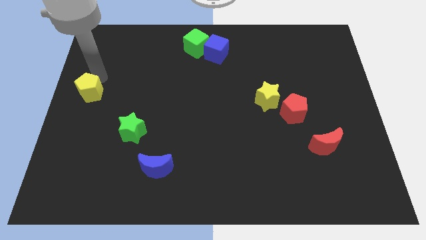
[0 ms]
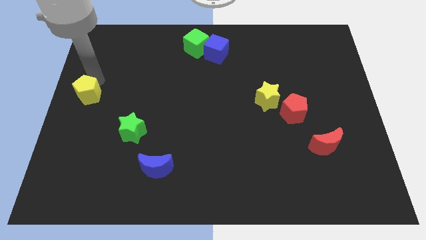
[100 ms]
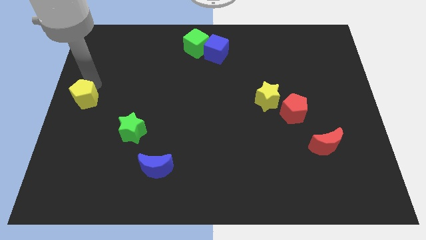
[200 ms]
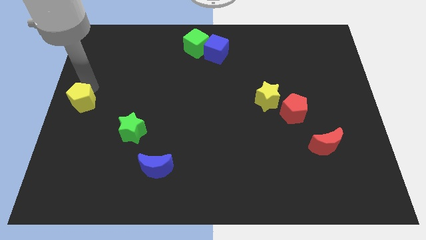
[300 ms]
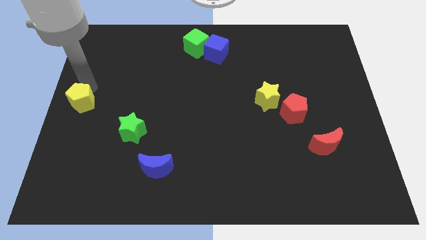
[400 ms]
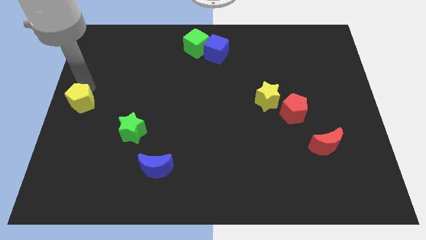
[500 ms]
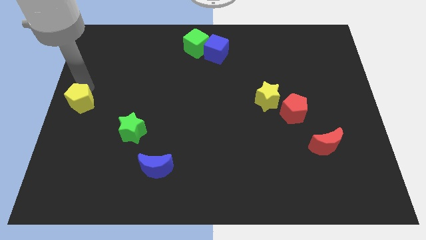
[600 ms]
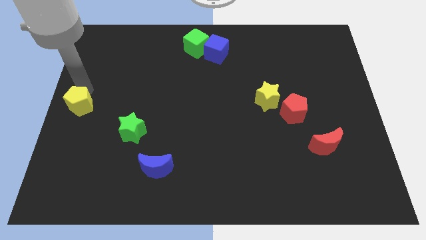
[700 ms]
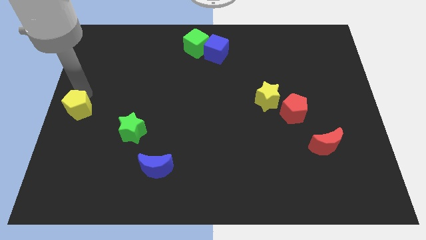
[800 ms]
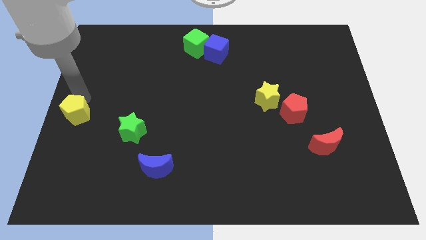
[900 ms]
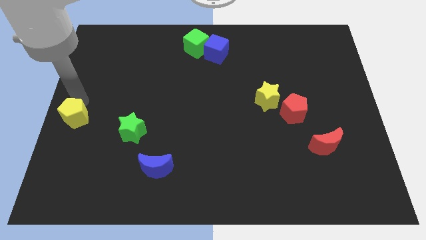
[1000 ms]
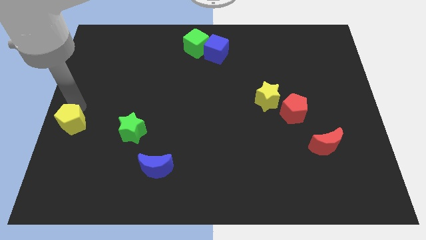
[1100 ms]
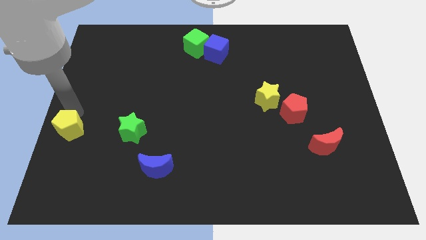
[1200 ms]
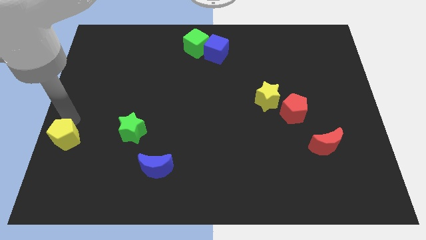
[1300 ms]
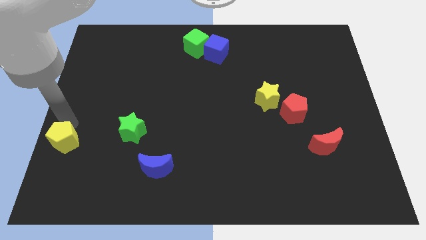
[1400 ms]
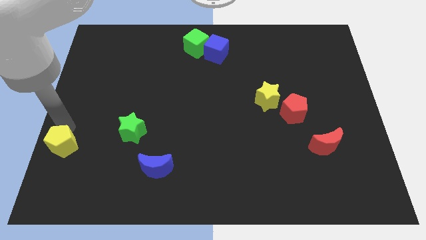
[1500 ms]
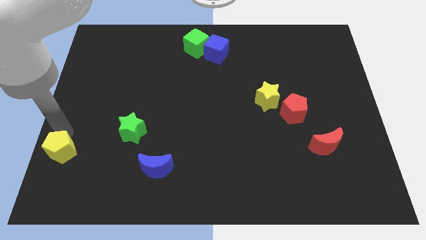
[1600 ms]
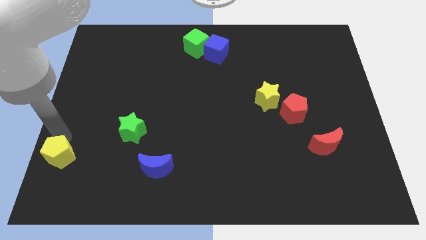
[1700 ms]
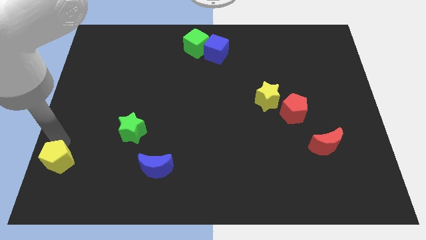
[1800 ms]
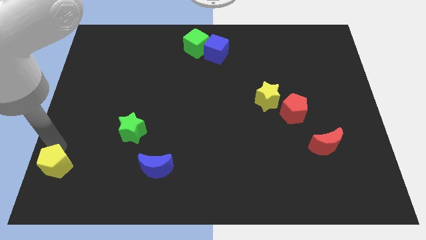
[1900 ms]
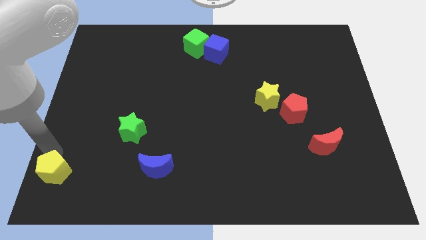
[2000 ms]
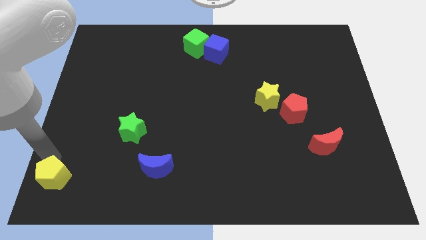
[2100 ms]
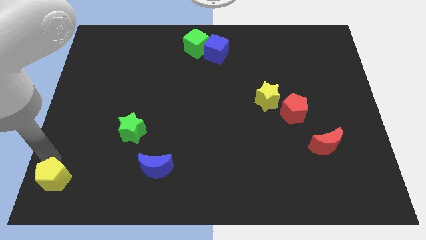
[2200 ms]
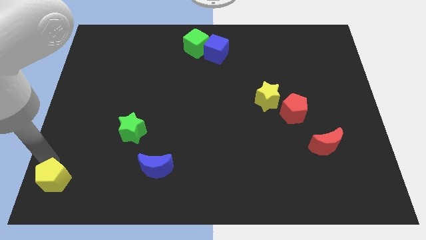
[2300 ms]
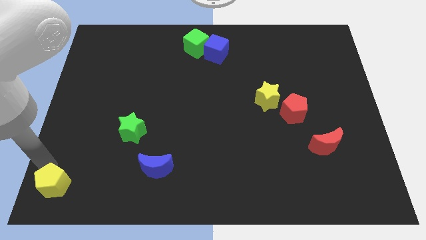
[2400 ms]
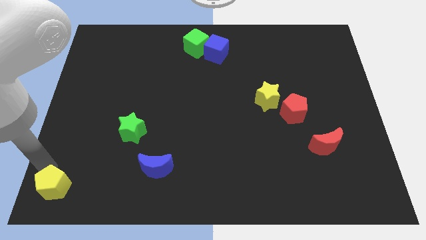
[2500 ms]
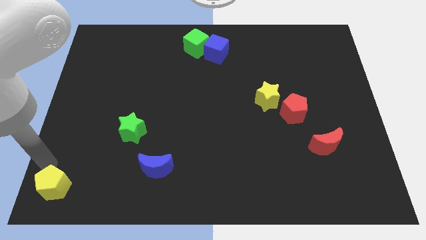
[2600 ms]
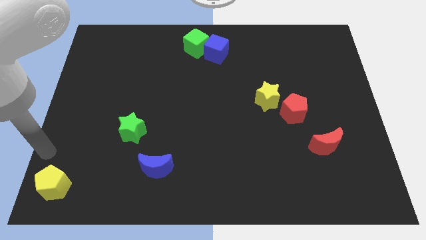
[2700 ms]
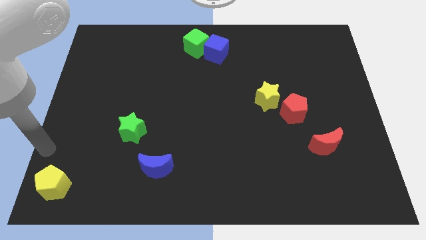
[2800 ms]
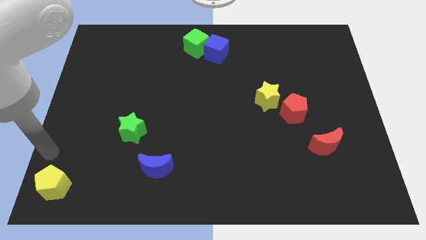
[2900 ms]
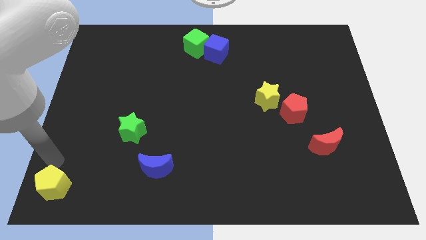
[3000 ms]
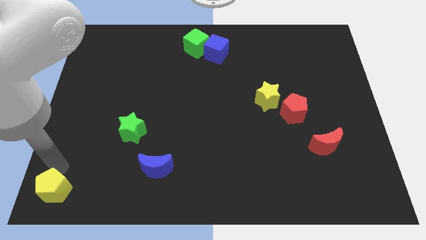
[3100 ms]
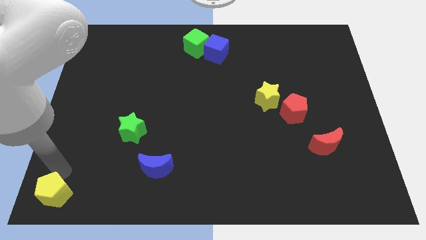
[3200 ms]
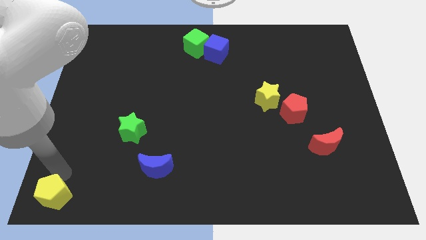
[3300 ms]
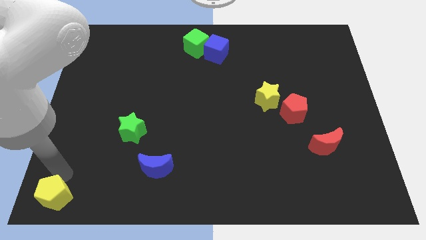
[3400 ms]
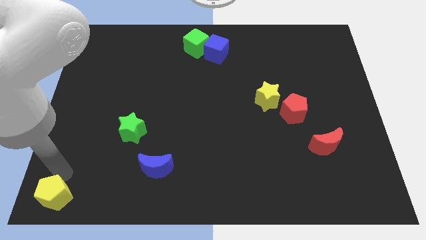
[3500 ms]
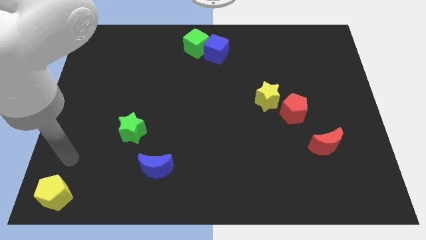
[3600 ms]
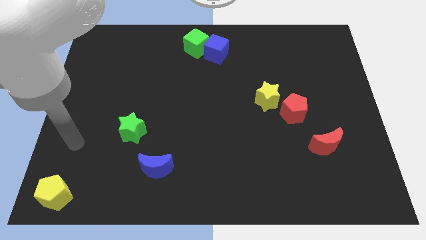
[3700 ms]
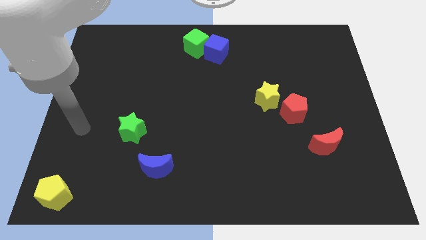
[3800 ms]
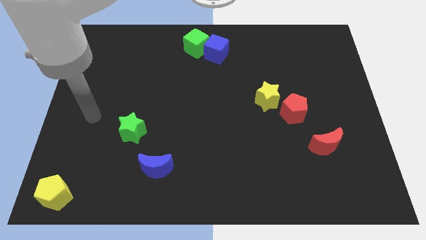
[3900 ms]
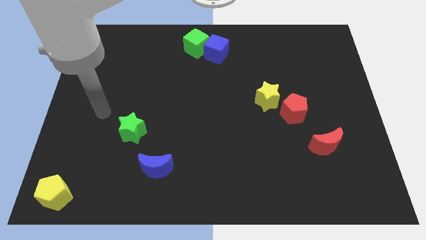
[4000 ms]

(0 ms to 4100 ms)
push the yellow pentagon to the bottom left corner of the board

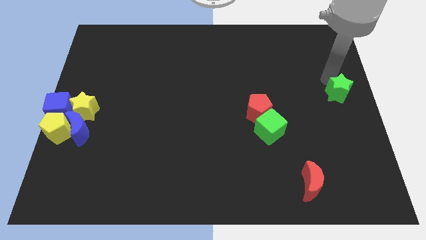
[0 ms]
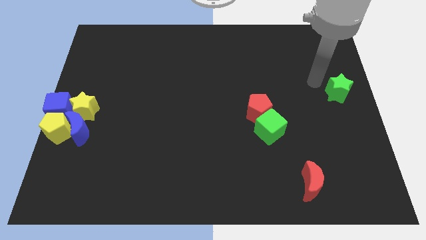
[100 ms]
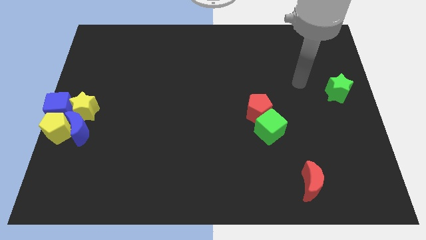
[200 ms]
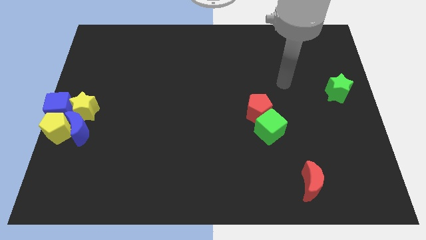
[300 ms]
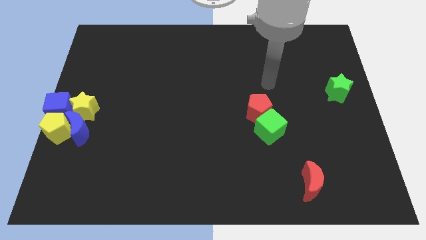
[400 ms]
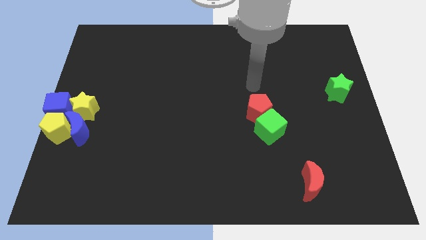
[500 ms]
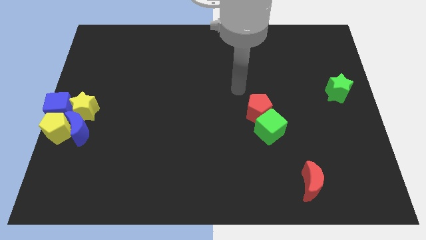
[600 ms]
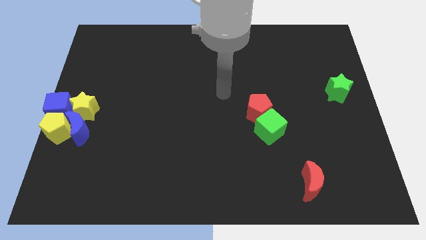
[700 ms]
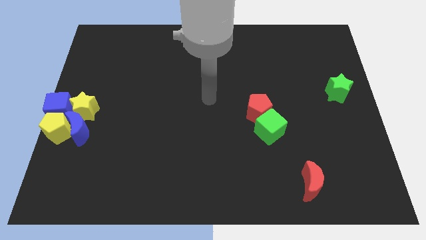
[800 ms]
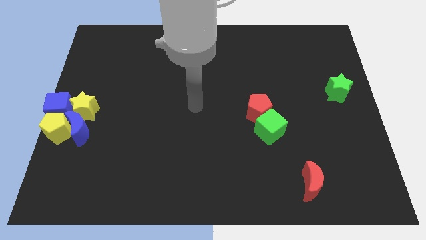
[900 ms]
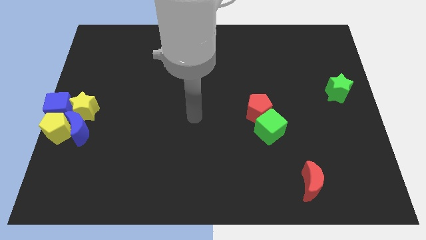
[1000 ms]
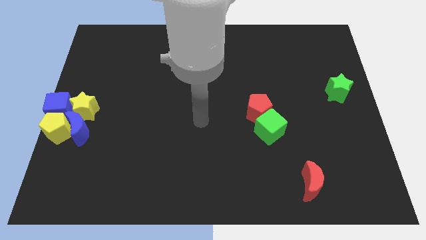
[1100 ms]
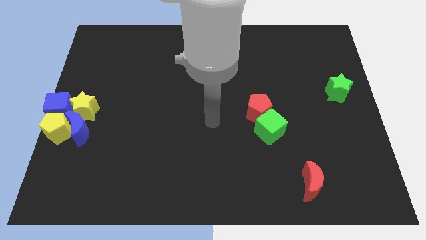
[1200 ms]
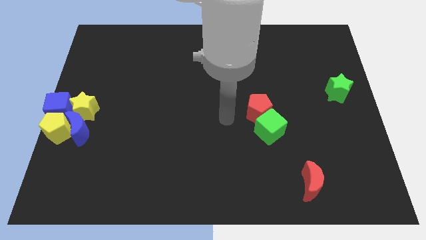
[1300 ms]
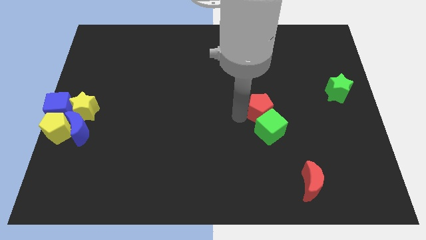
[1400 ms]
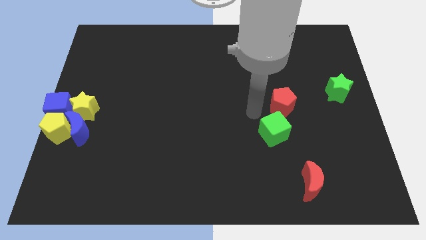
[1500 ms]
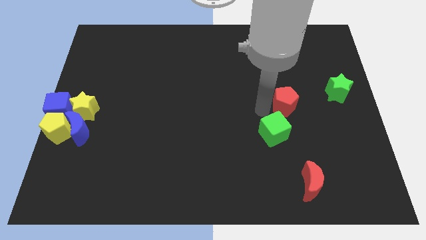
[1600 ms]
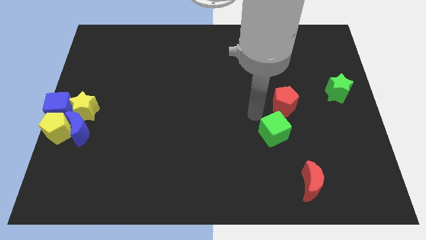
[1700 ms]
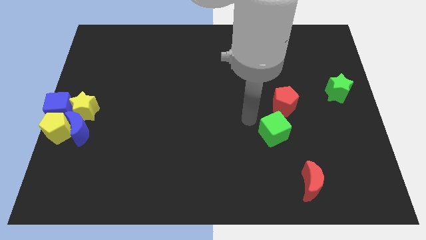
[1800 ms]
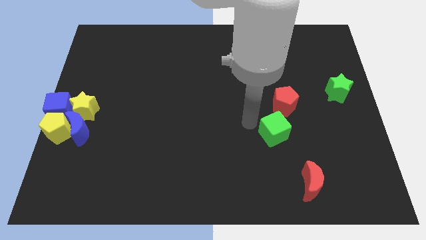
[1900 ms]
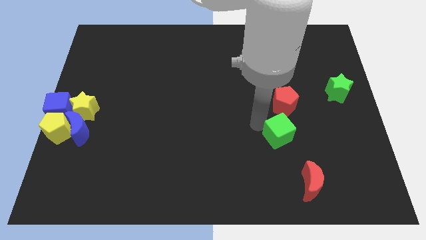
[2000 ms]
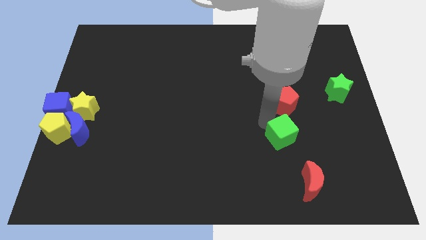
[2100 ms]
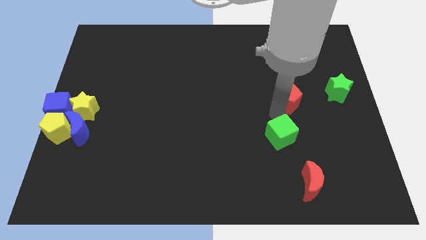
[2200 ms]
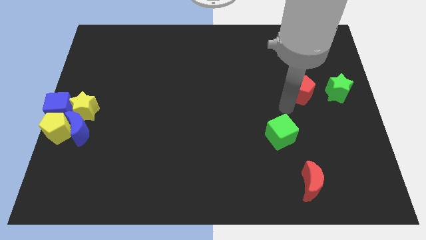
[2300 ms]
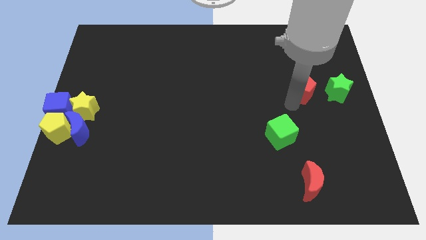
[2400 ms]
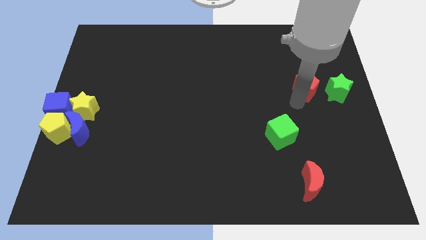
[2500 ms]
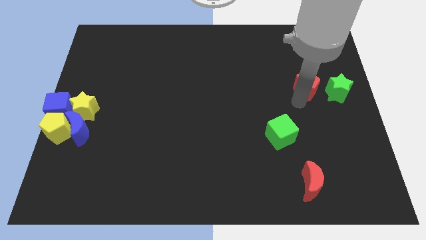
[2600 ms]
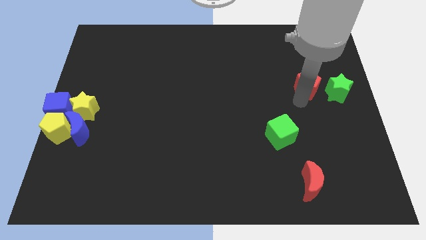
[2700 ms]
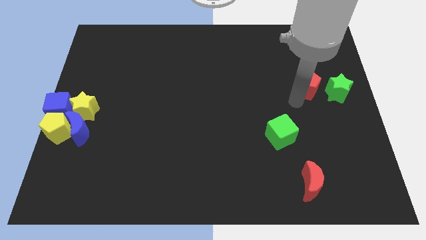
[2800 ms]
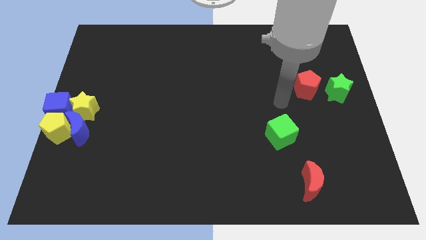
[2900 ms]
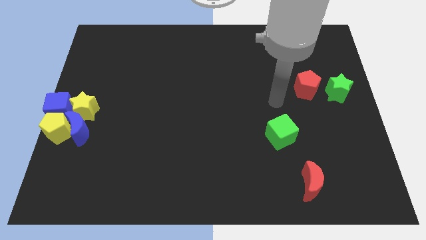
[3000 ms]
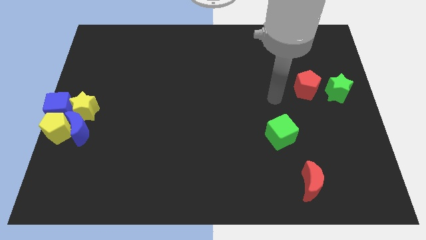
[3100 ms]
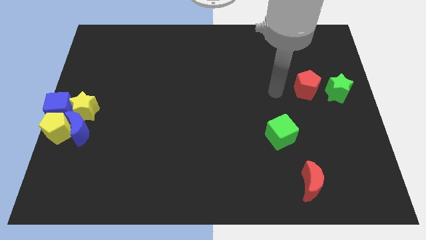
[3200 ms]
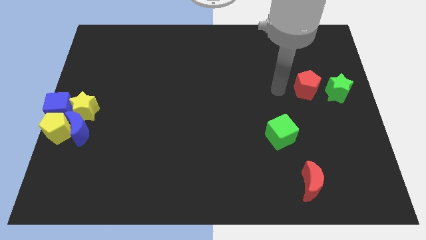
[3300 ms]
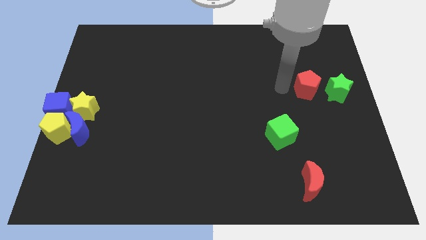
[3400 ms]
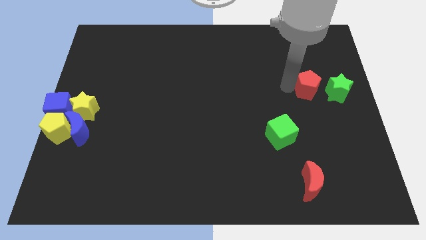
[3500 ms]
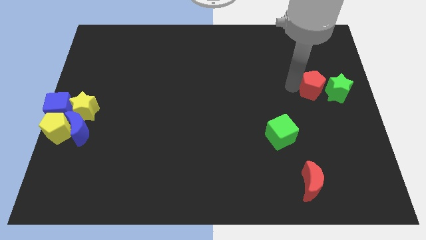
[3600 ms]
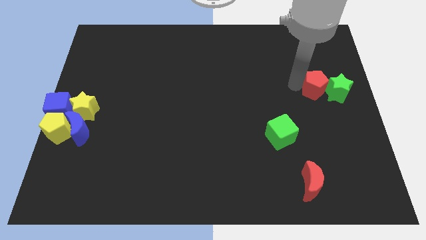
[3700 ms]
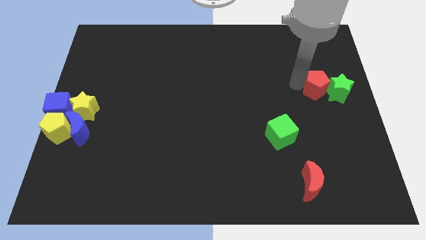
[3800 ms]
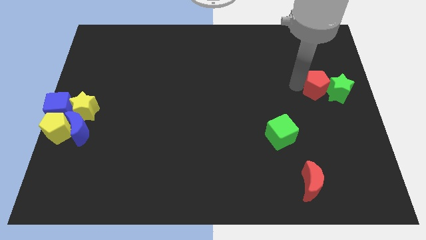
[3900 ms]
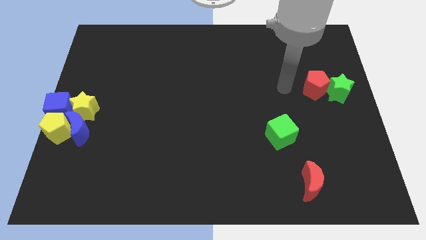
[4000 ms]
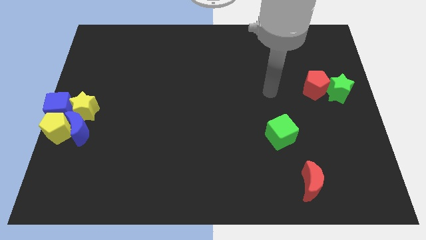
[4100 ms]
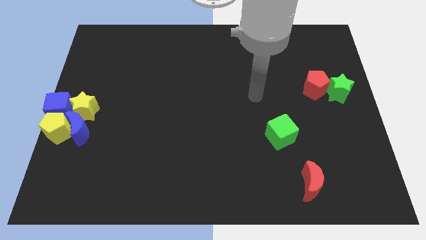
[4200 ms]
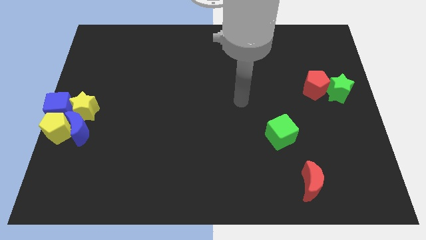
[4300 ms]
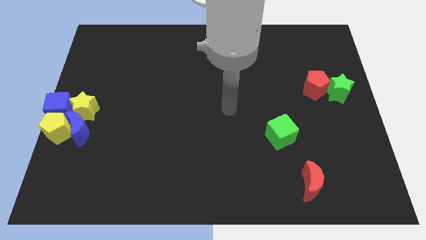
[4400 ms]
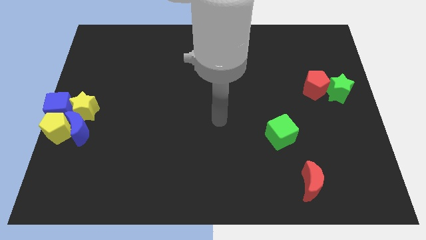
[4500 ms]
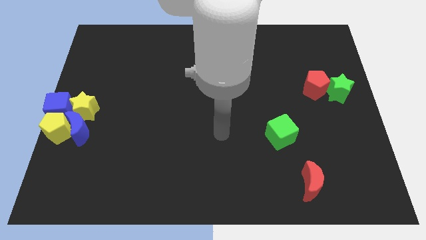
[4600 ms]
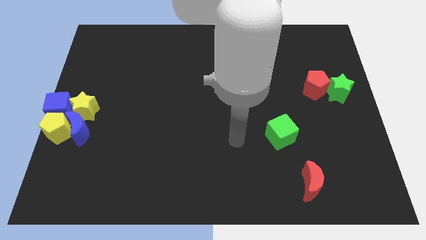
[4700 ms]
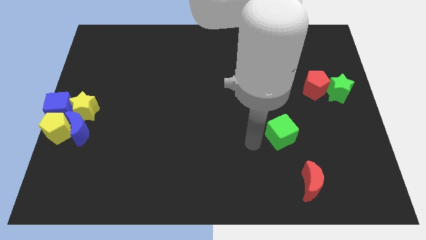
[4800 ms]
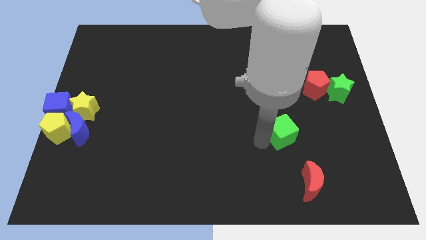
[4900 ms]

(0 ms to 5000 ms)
push the red pentagon into the green star
